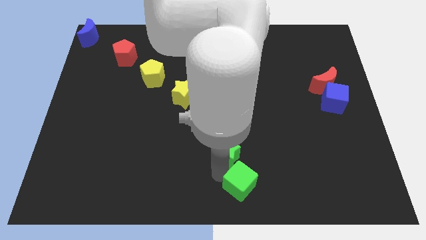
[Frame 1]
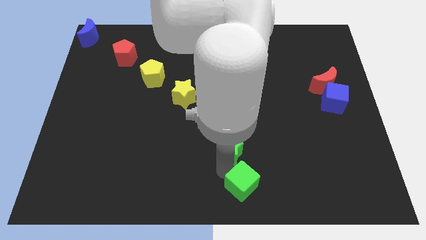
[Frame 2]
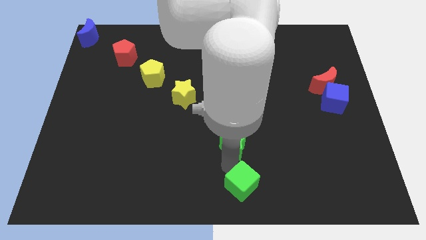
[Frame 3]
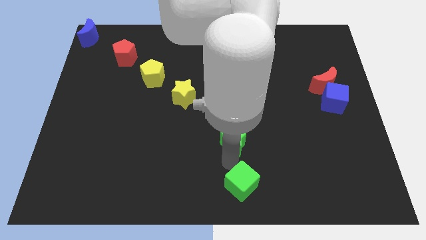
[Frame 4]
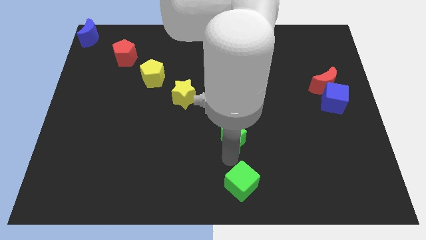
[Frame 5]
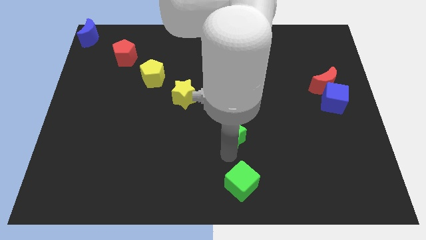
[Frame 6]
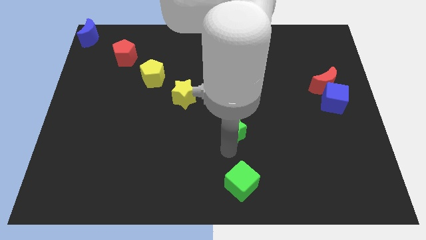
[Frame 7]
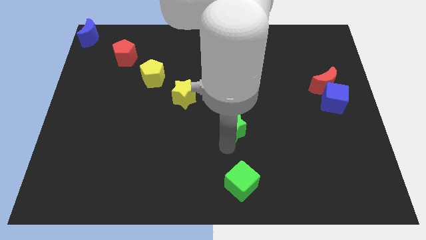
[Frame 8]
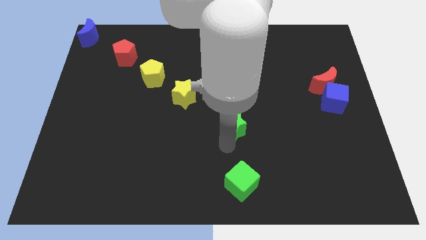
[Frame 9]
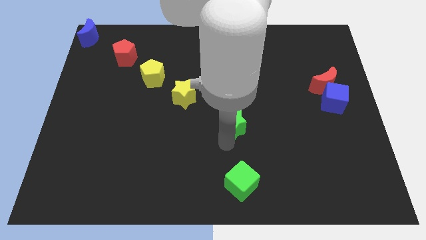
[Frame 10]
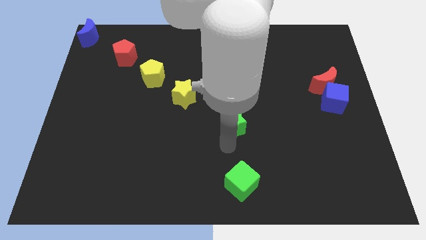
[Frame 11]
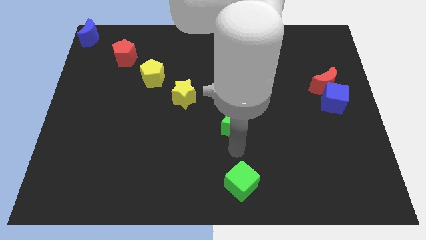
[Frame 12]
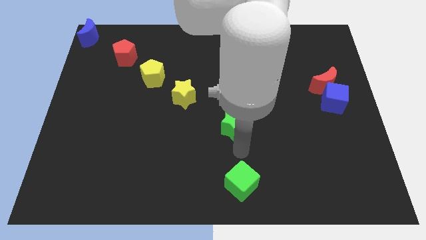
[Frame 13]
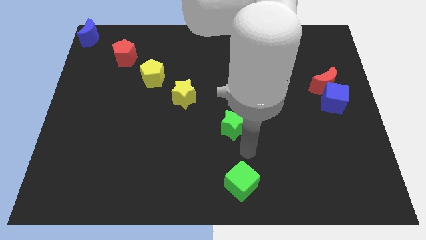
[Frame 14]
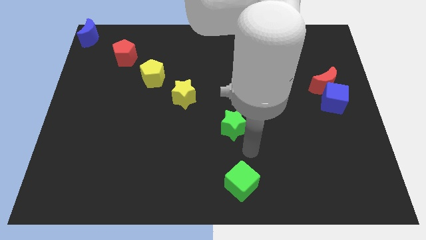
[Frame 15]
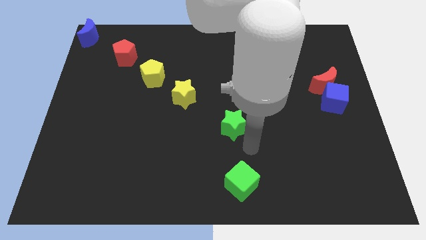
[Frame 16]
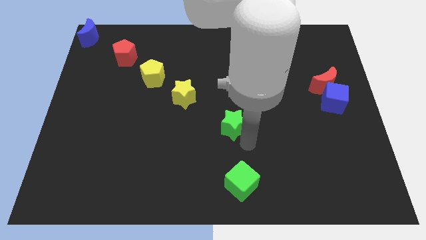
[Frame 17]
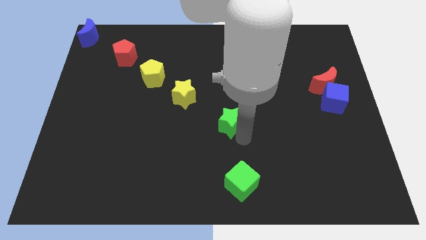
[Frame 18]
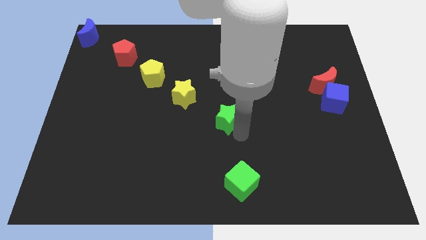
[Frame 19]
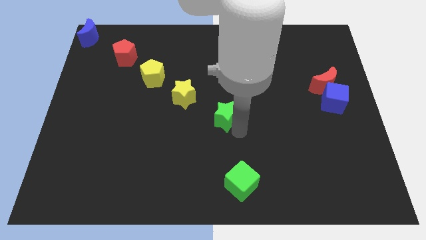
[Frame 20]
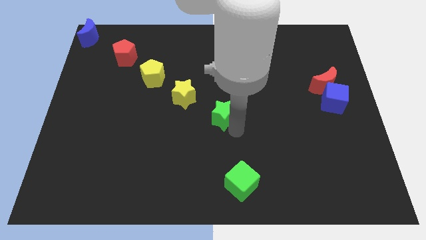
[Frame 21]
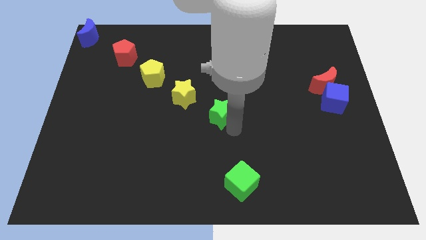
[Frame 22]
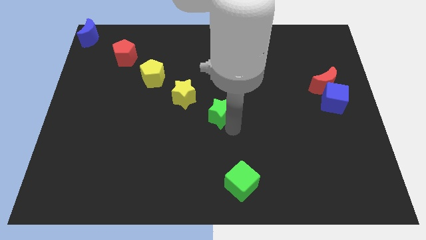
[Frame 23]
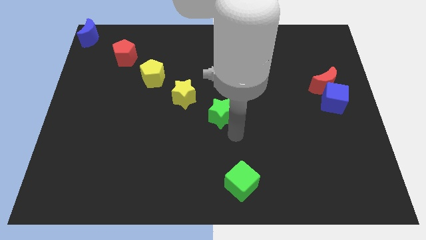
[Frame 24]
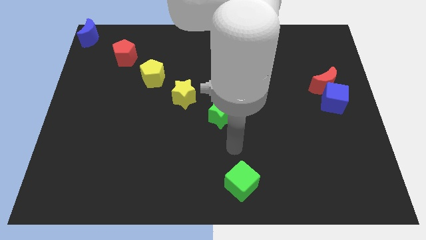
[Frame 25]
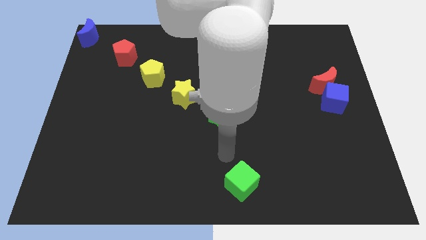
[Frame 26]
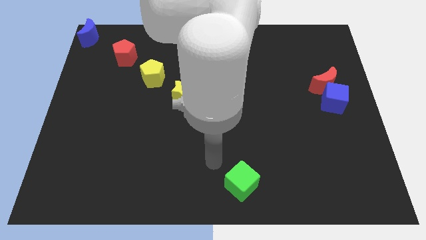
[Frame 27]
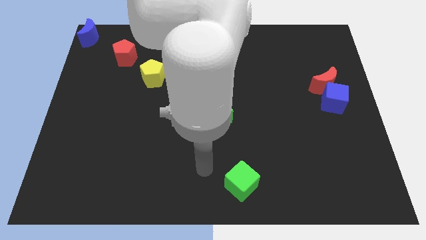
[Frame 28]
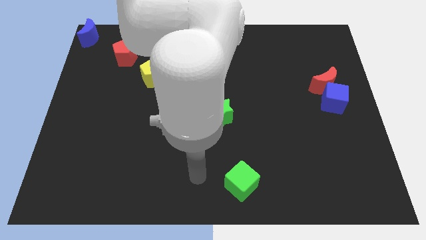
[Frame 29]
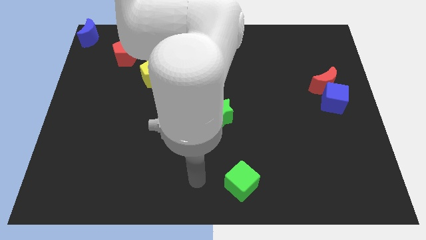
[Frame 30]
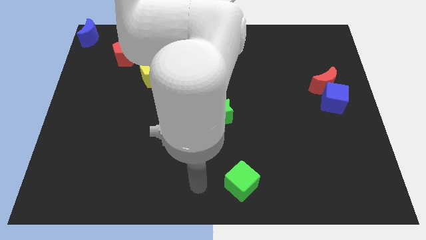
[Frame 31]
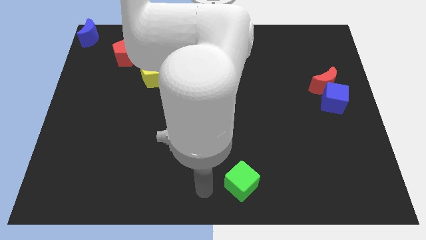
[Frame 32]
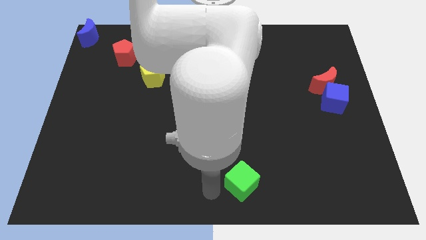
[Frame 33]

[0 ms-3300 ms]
move green star diagonally right below yellow star

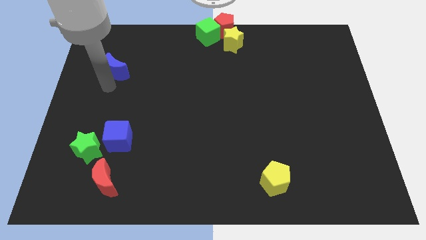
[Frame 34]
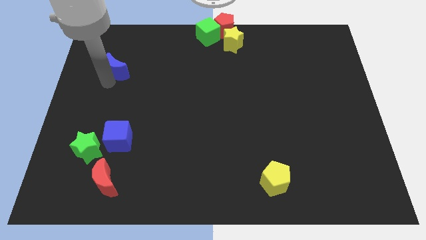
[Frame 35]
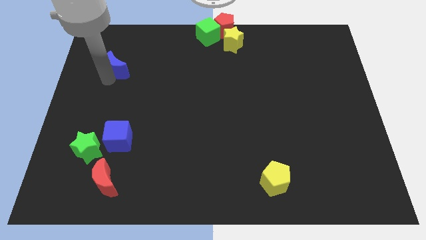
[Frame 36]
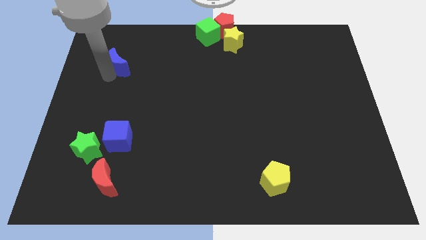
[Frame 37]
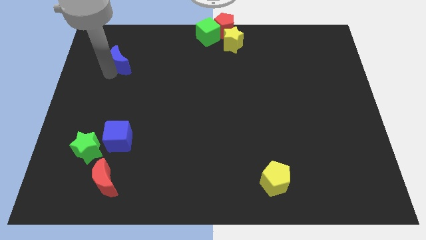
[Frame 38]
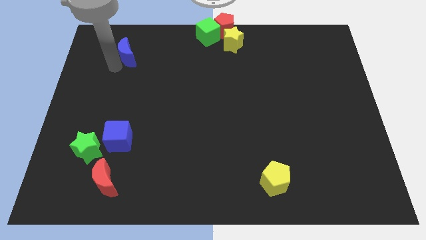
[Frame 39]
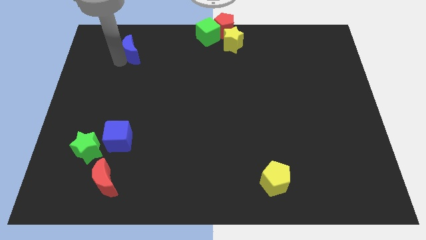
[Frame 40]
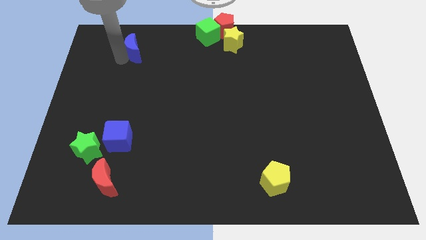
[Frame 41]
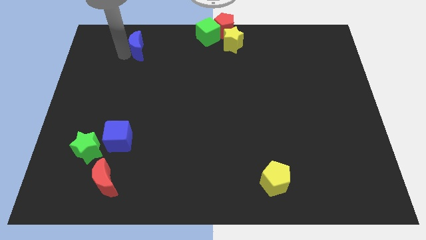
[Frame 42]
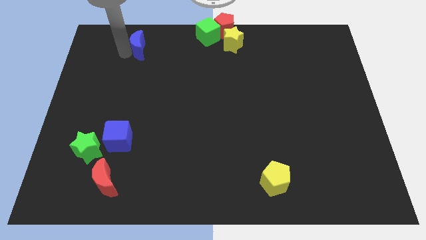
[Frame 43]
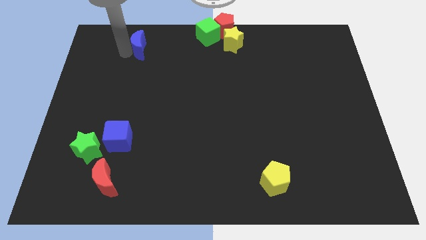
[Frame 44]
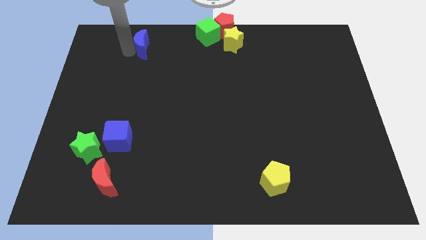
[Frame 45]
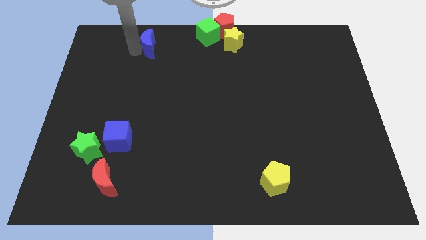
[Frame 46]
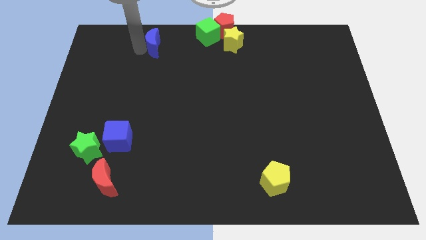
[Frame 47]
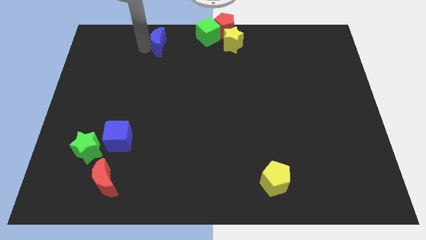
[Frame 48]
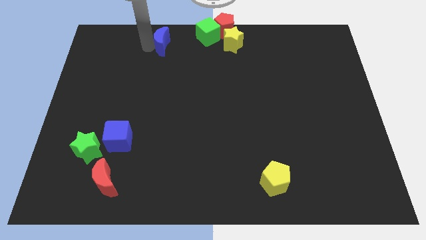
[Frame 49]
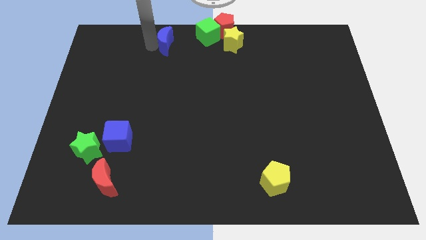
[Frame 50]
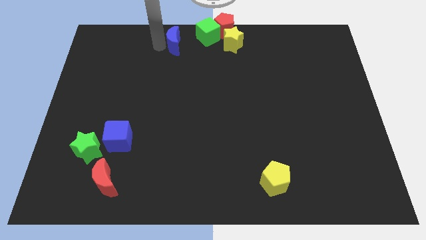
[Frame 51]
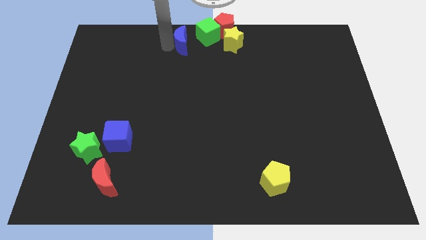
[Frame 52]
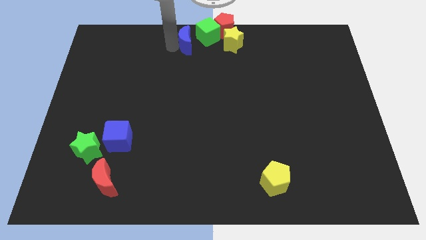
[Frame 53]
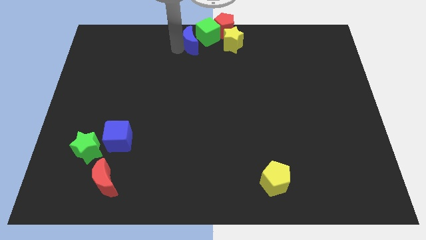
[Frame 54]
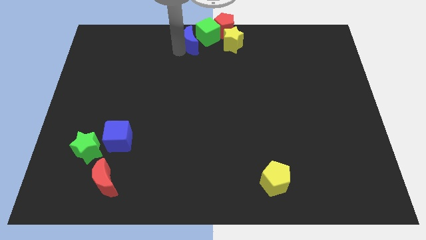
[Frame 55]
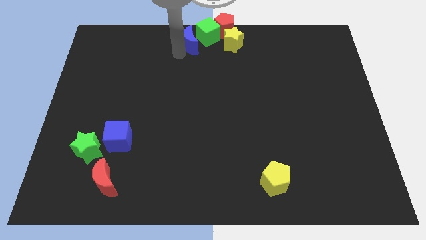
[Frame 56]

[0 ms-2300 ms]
place the blue moon to the left of the green cube

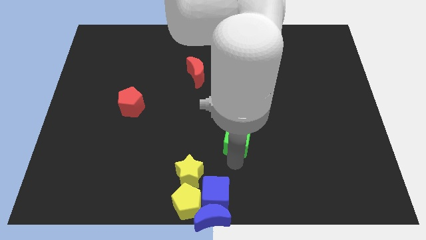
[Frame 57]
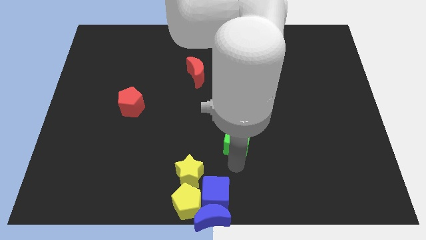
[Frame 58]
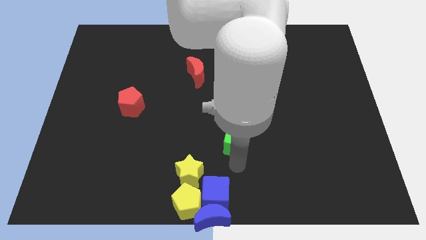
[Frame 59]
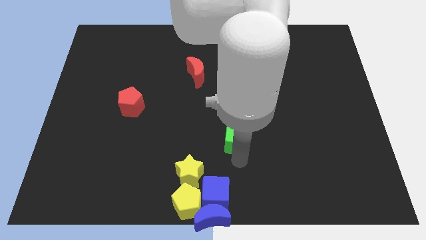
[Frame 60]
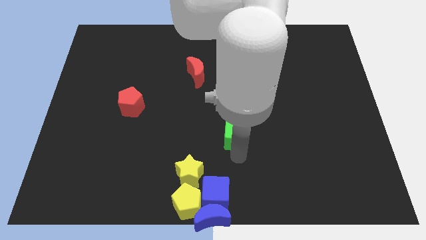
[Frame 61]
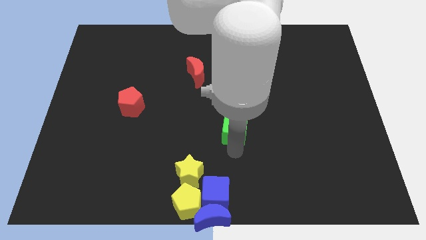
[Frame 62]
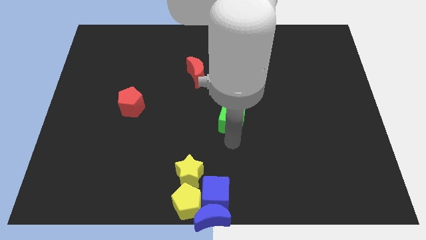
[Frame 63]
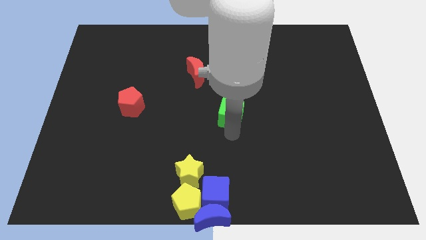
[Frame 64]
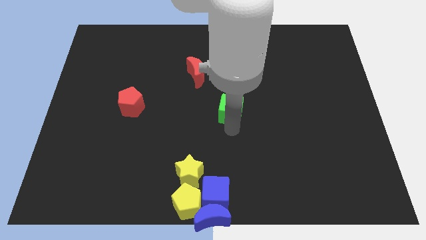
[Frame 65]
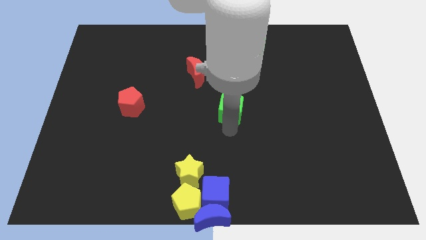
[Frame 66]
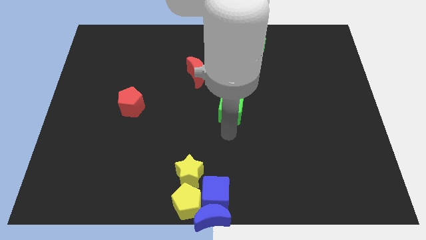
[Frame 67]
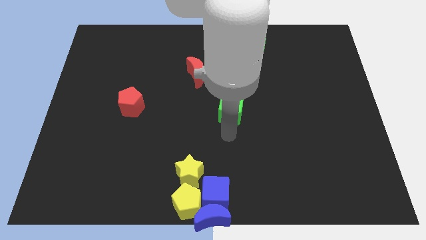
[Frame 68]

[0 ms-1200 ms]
move the green cube to the center of the board

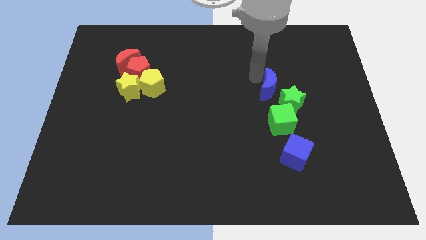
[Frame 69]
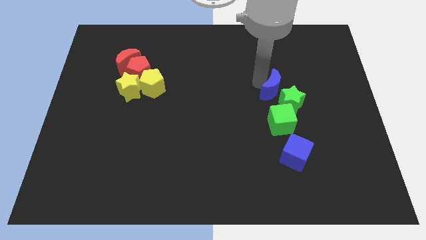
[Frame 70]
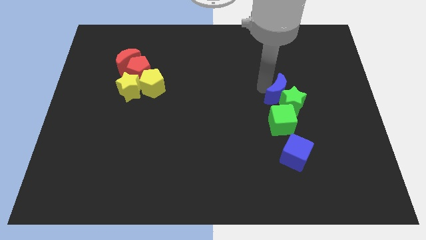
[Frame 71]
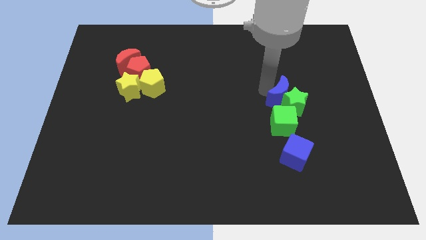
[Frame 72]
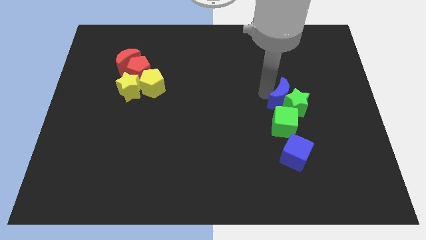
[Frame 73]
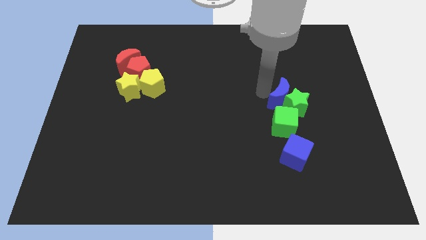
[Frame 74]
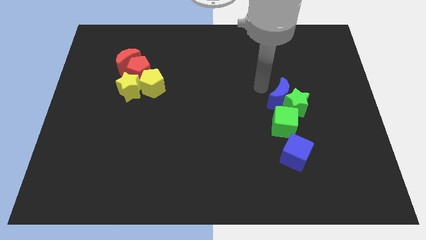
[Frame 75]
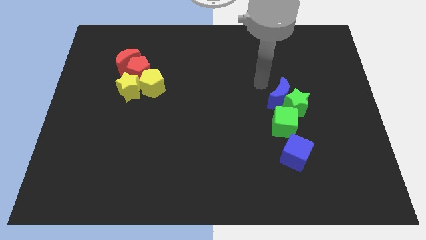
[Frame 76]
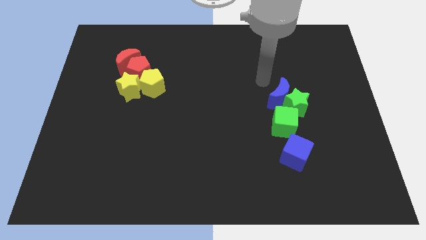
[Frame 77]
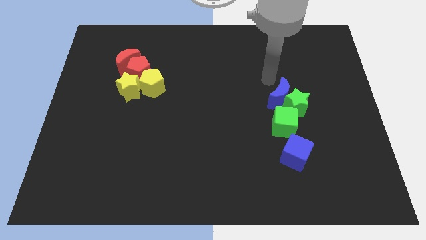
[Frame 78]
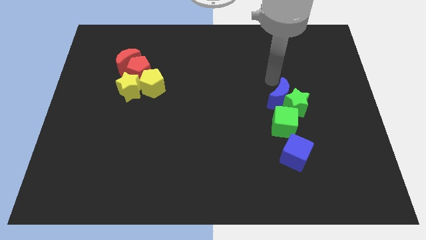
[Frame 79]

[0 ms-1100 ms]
place the blue crescent above the green star

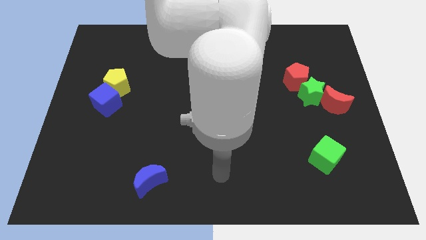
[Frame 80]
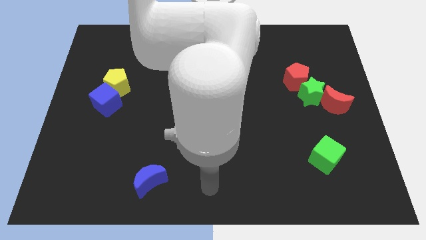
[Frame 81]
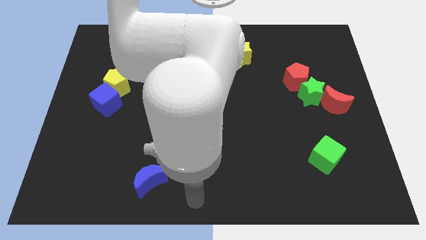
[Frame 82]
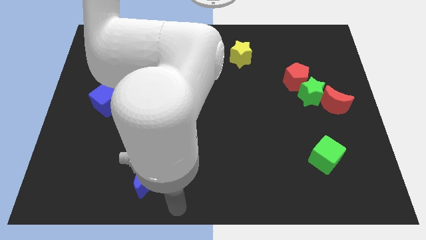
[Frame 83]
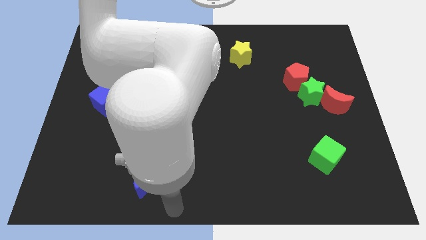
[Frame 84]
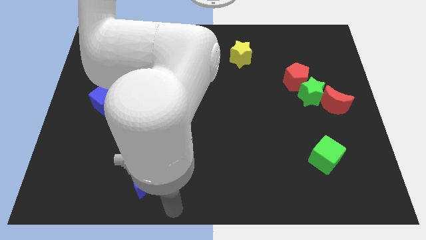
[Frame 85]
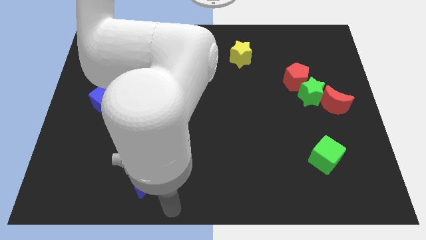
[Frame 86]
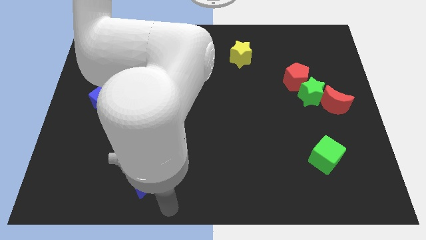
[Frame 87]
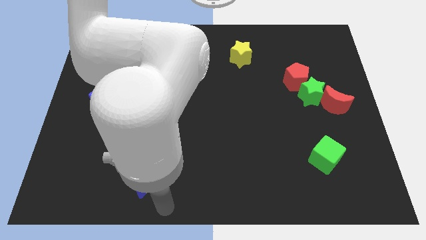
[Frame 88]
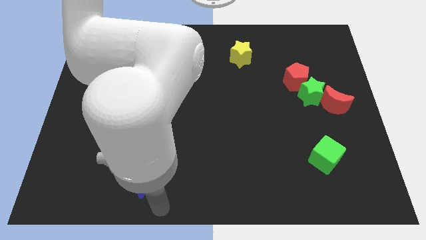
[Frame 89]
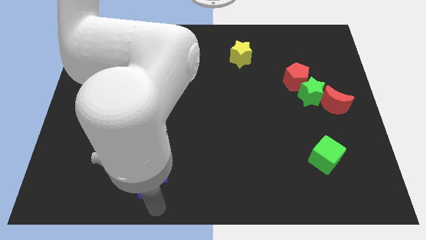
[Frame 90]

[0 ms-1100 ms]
slide your arm below the blue moon

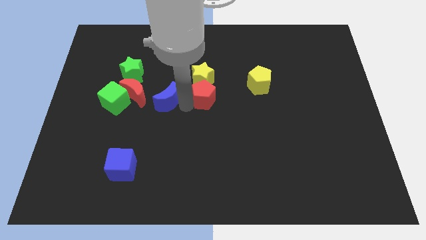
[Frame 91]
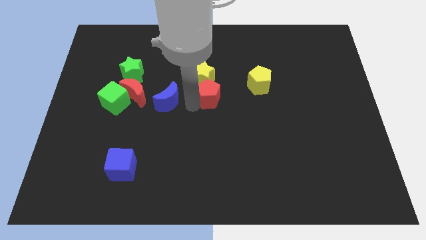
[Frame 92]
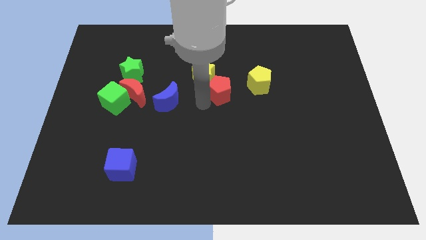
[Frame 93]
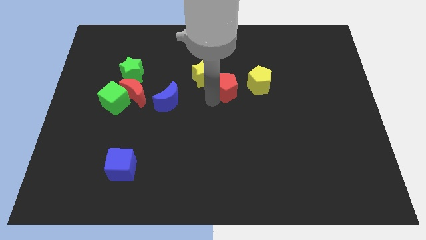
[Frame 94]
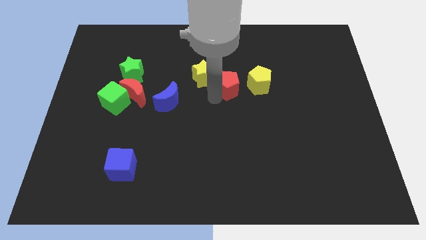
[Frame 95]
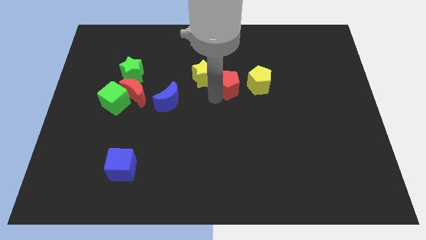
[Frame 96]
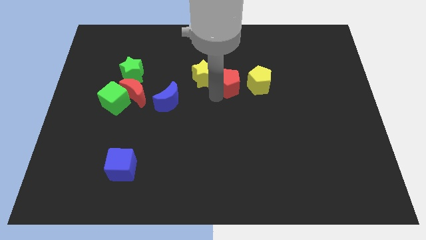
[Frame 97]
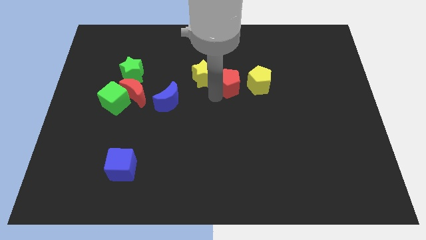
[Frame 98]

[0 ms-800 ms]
move the red pentagon to the left of the yellow pentagon
